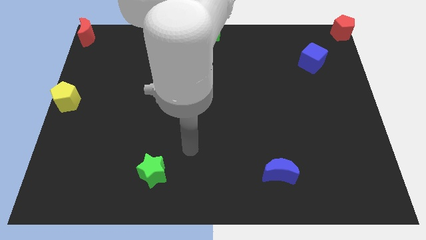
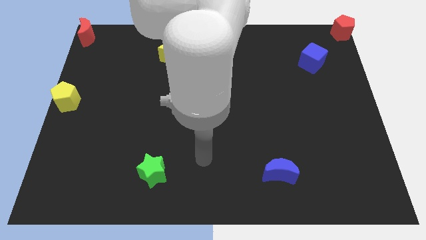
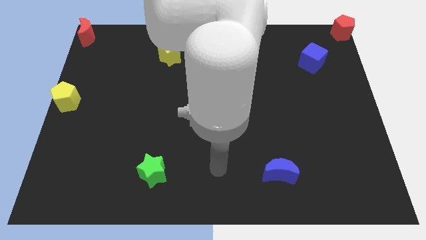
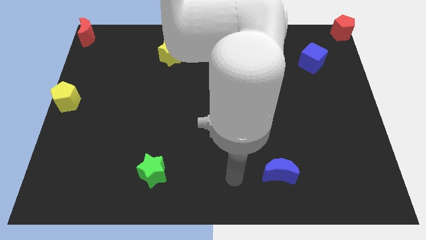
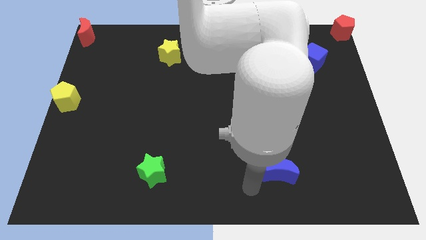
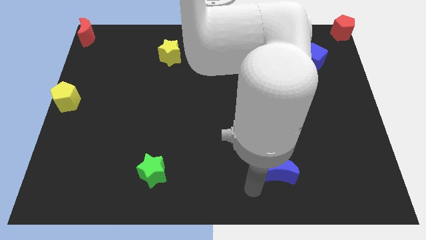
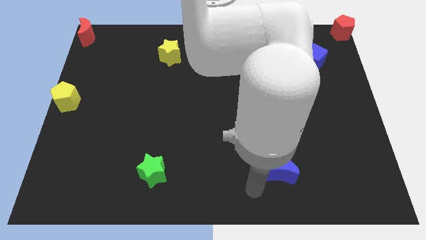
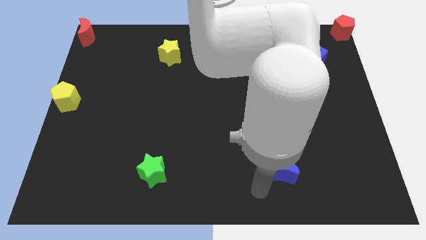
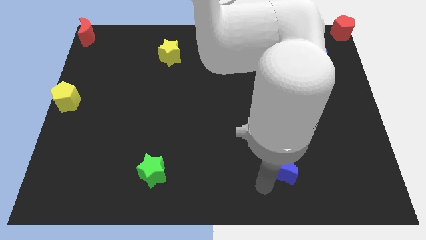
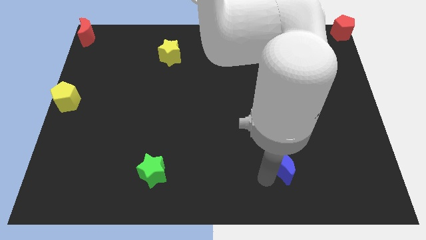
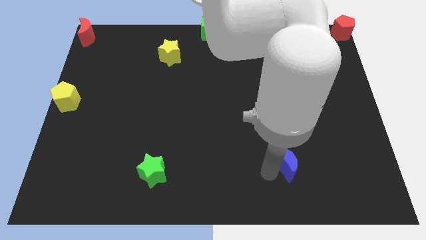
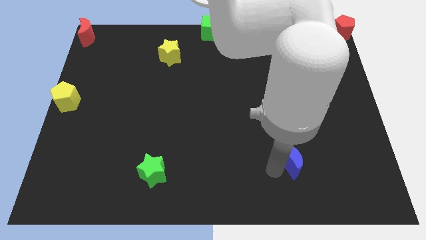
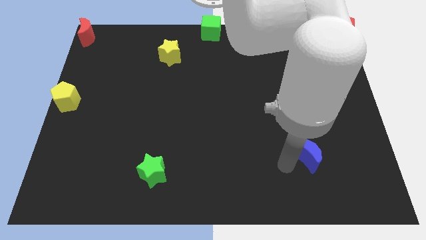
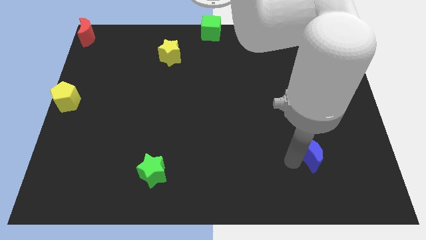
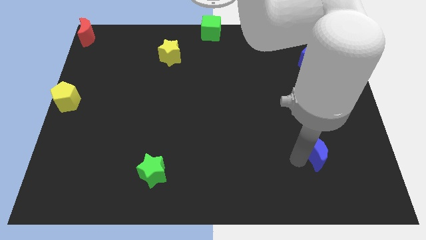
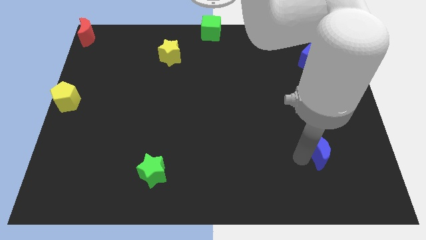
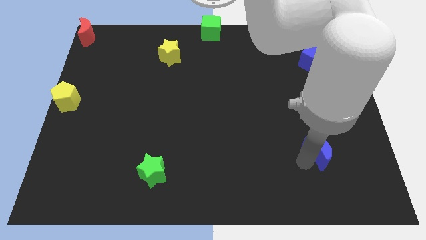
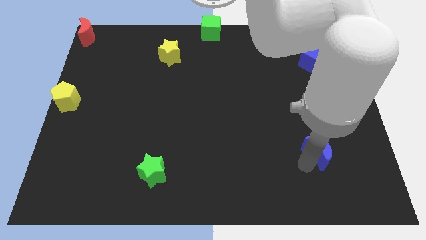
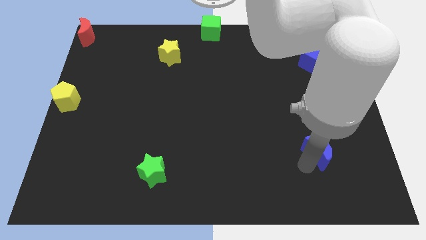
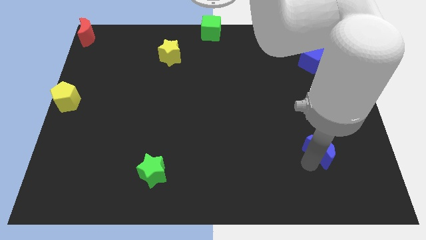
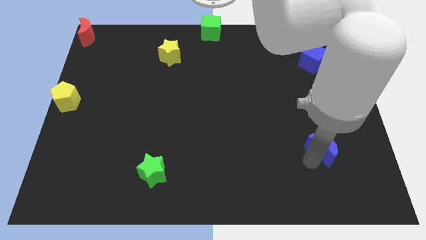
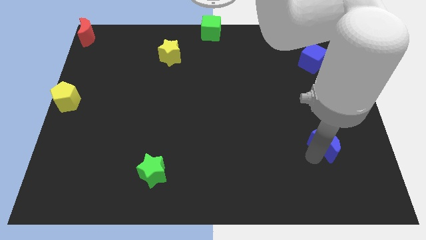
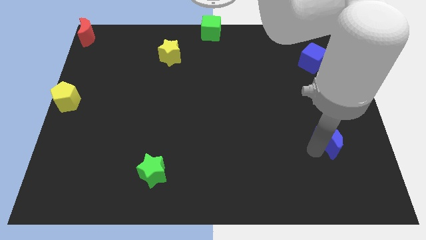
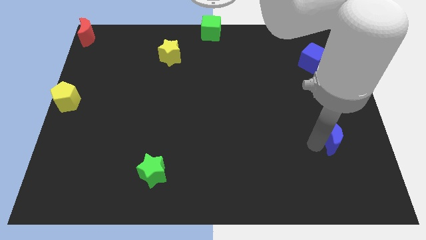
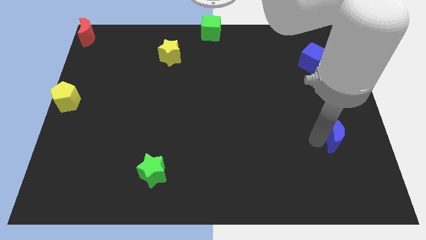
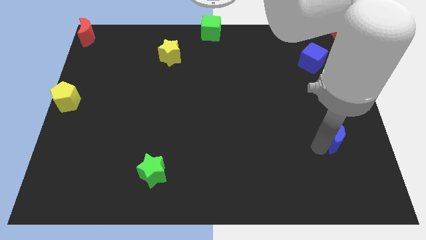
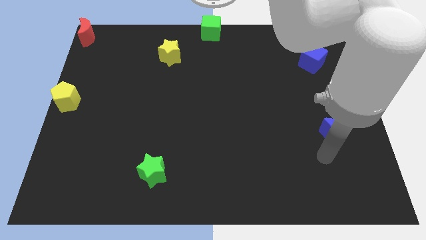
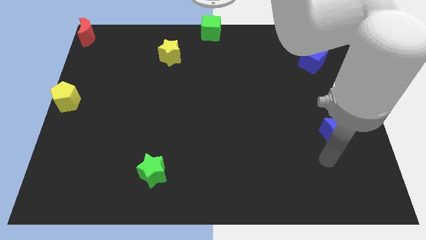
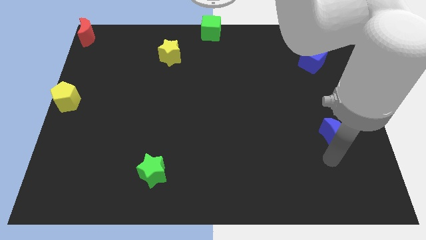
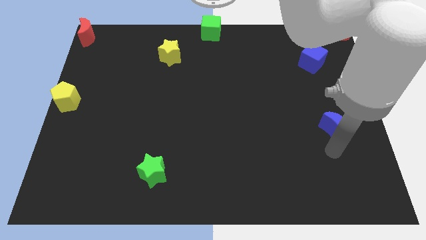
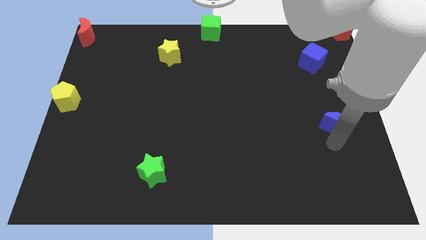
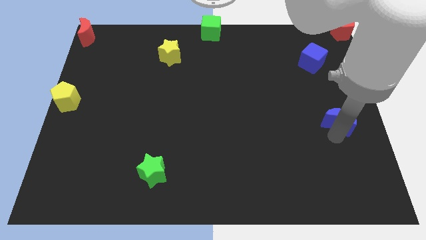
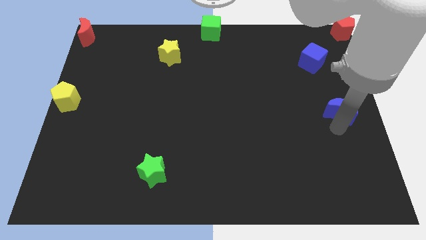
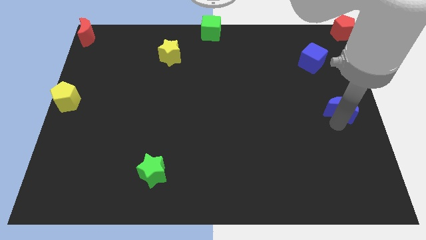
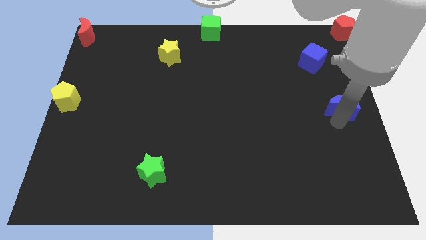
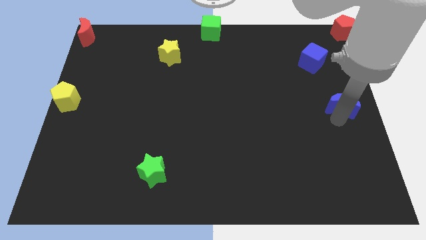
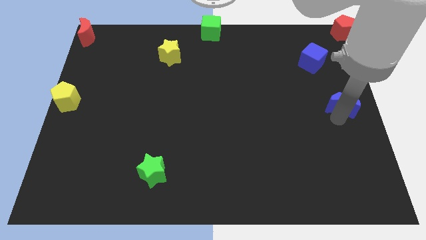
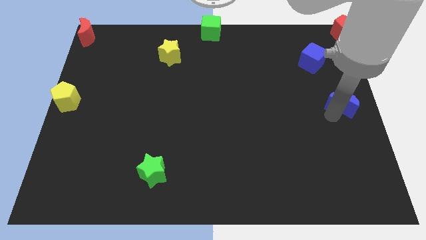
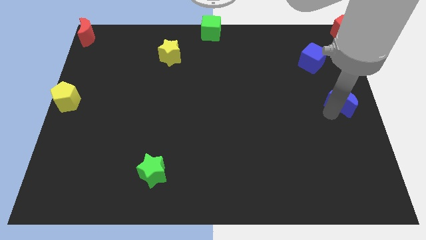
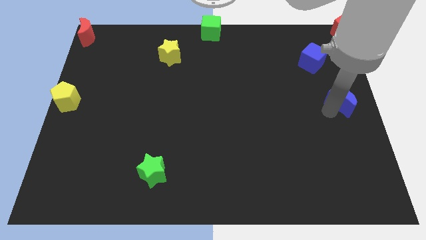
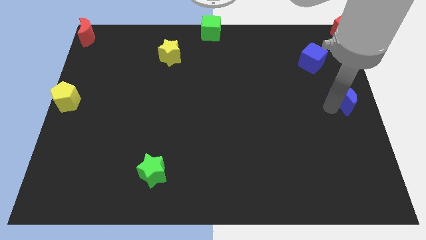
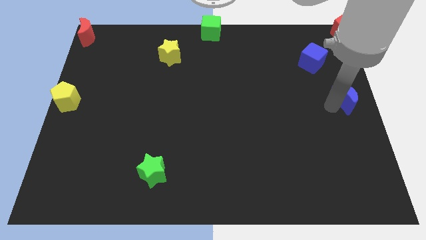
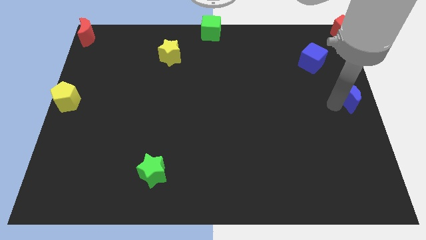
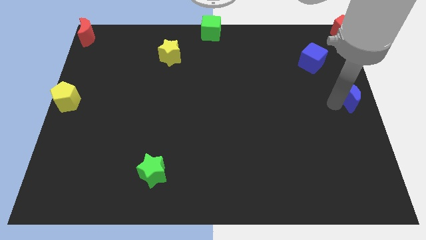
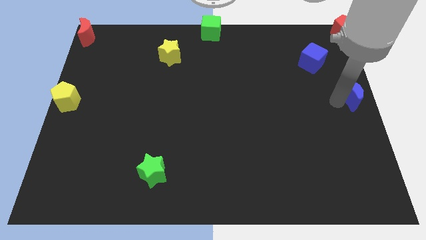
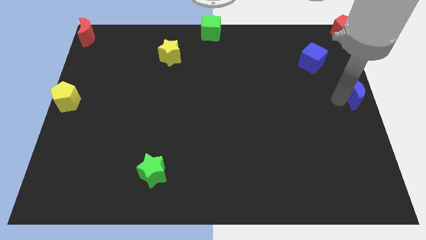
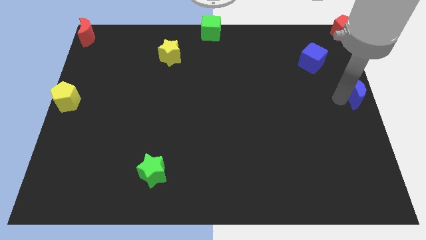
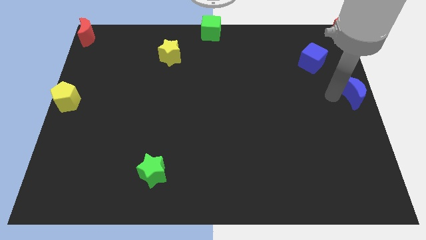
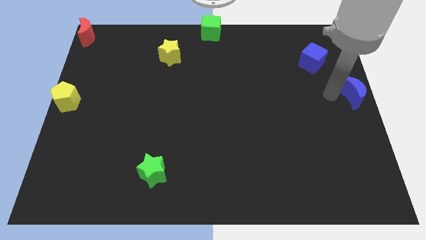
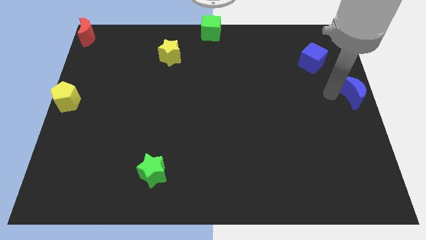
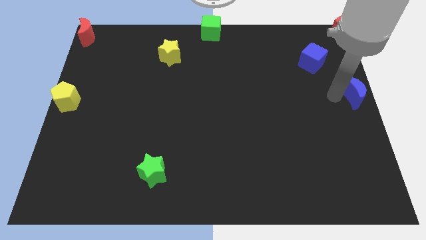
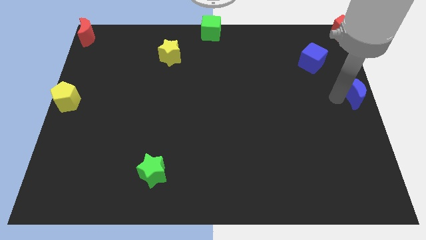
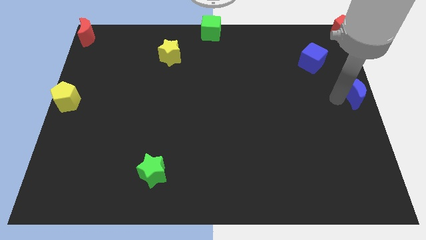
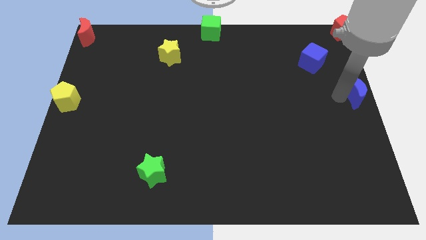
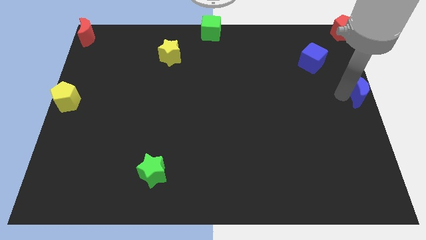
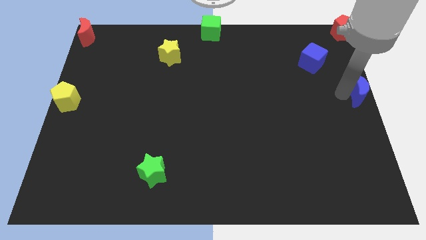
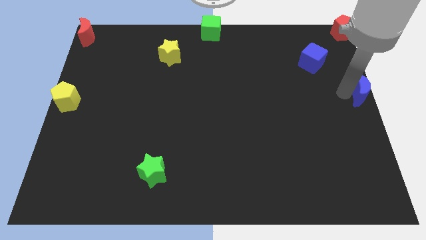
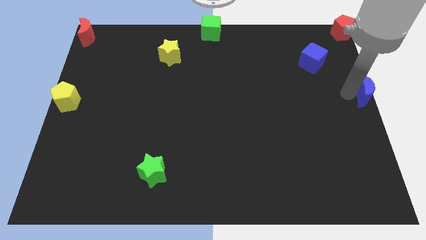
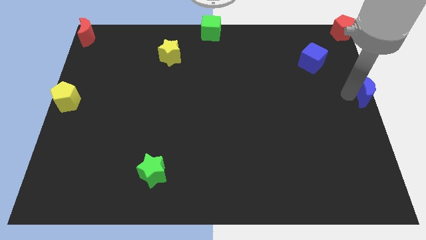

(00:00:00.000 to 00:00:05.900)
move the blue crescent to middle right side of the board

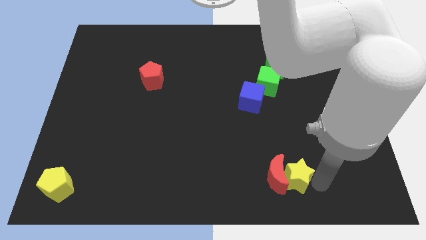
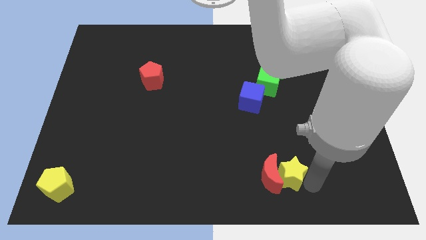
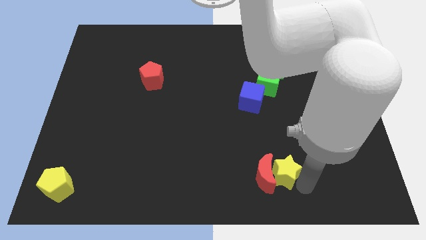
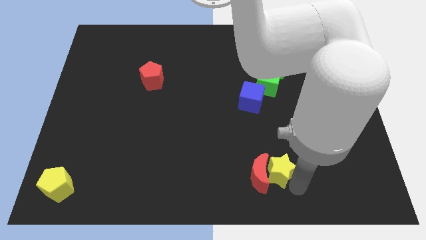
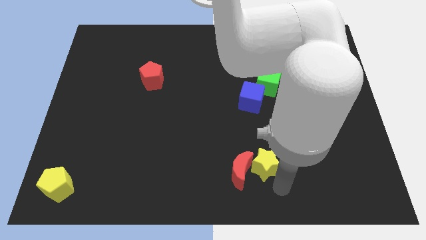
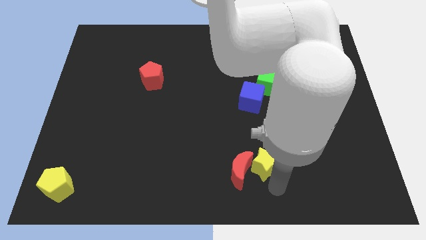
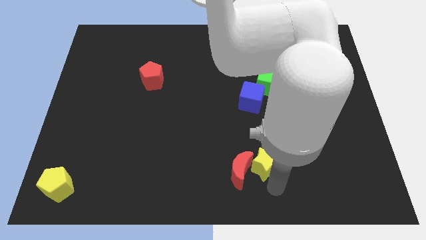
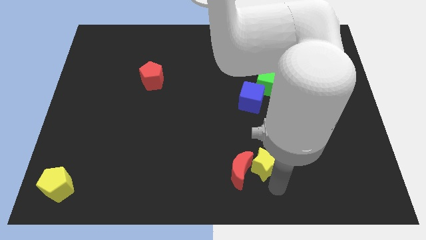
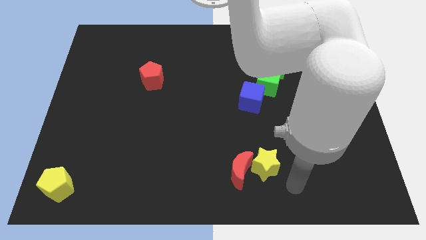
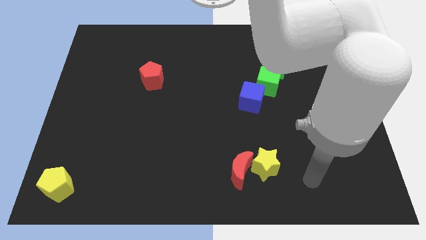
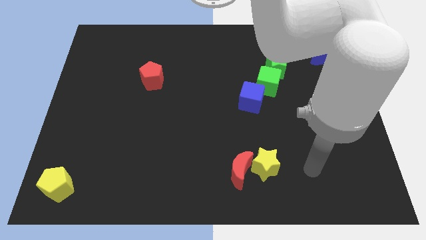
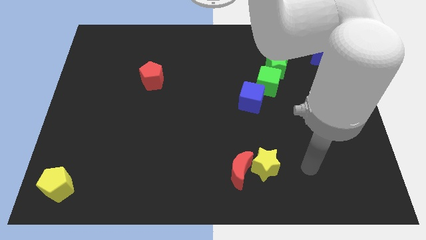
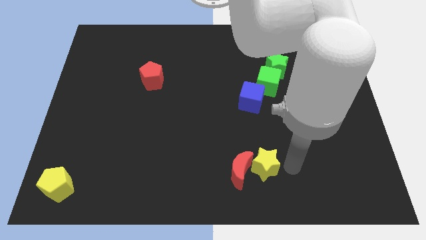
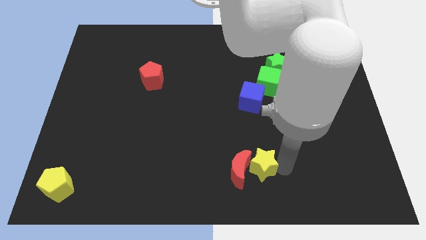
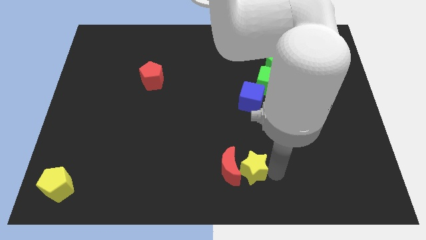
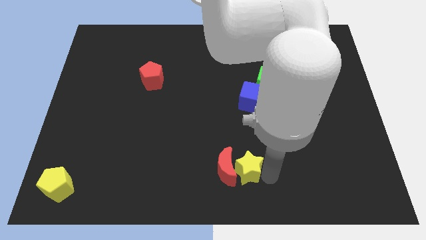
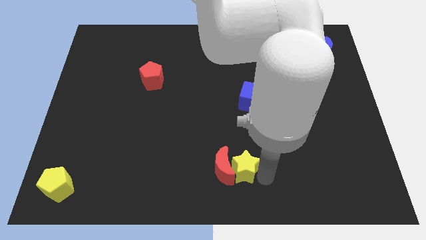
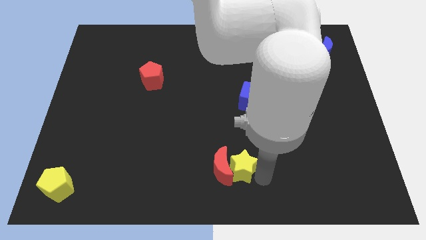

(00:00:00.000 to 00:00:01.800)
push the yellow star and red moon to the left side of the board

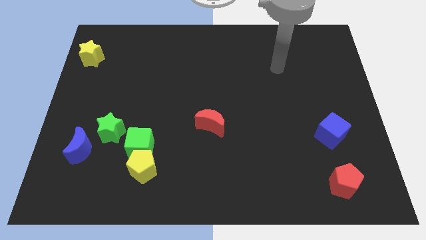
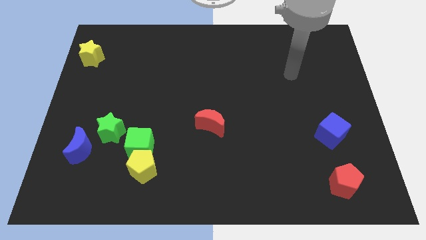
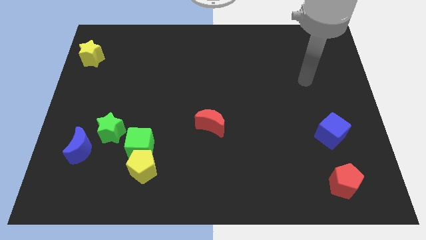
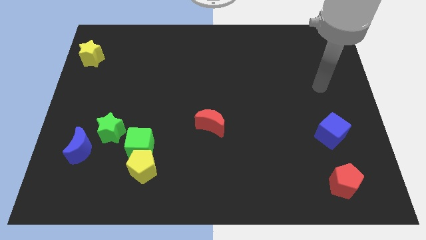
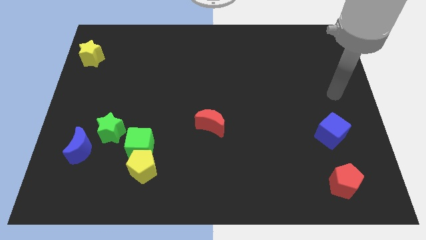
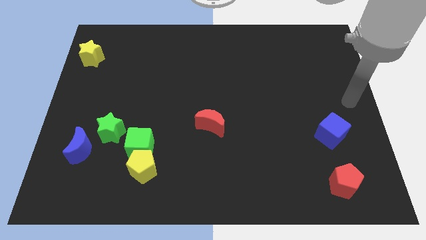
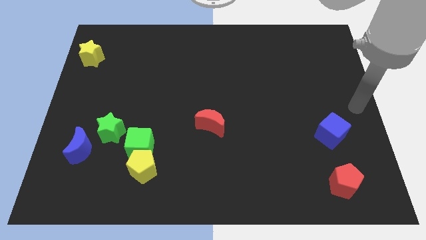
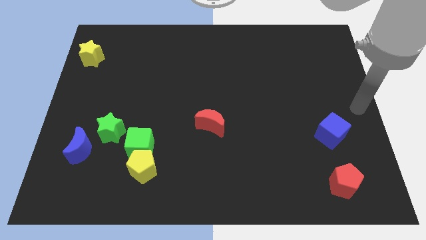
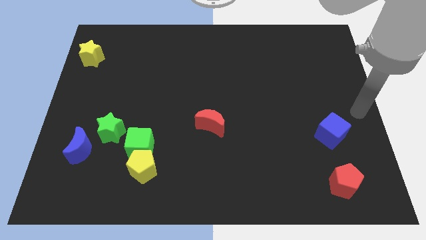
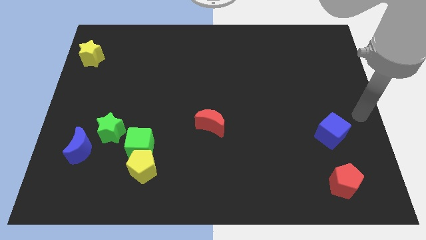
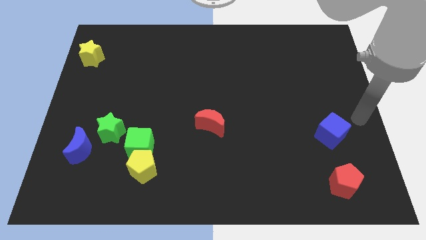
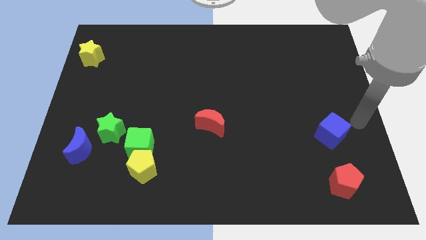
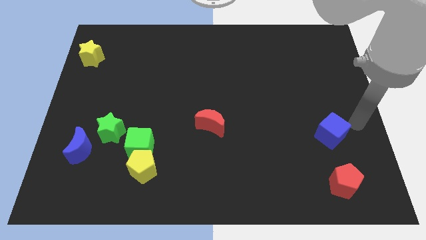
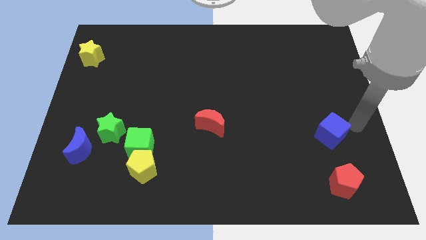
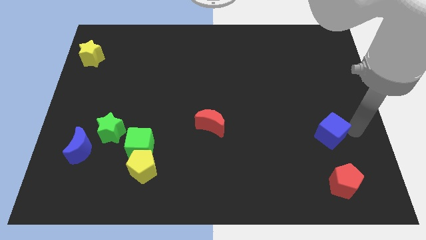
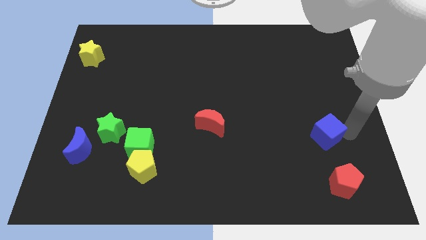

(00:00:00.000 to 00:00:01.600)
push the blue cube slightly to the left
